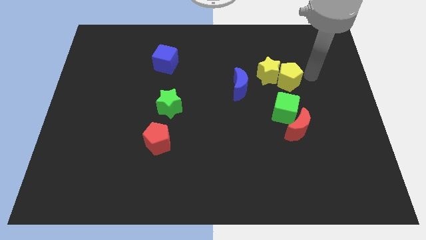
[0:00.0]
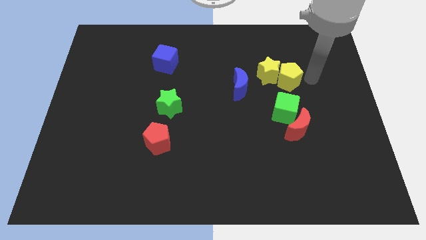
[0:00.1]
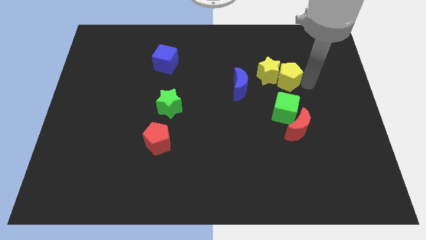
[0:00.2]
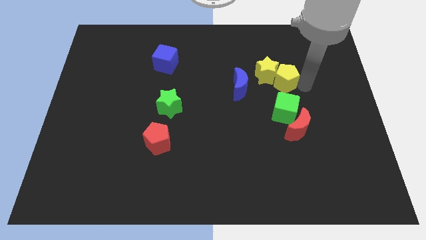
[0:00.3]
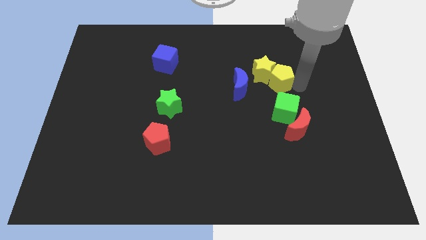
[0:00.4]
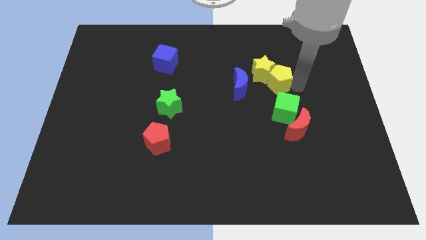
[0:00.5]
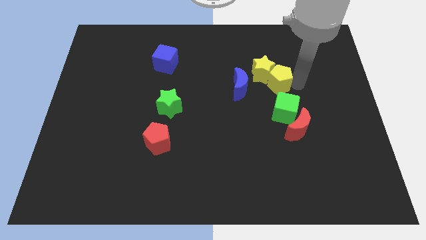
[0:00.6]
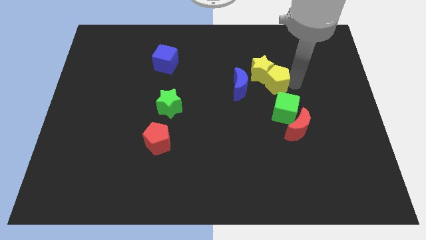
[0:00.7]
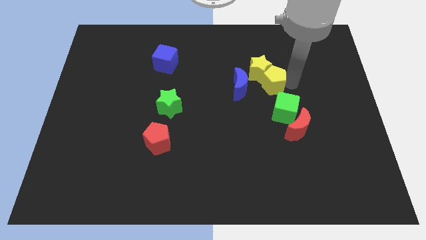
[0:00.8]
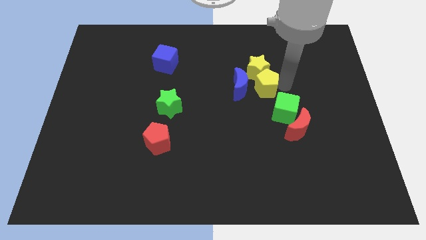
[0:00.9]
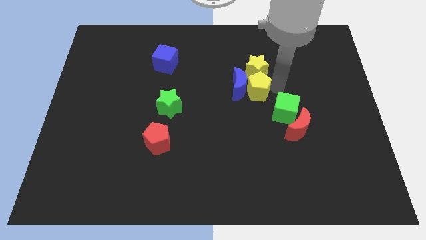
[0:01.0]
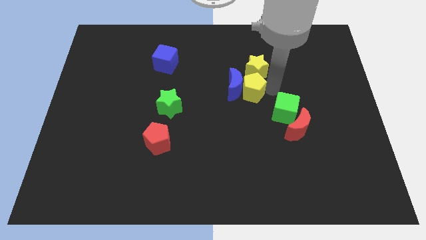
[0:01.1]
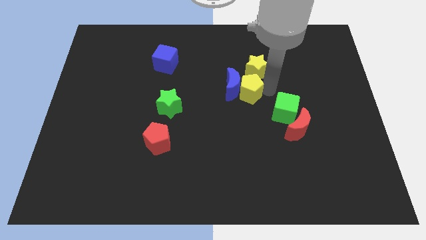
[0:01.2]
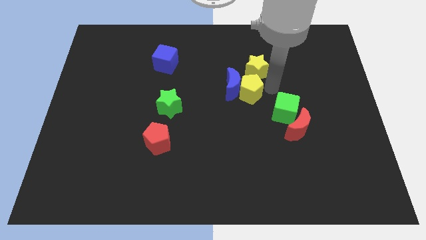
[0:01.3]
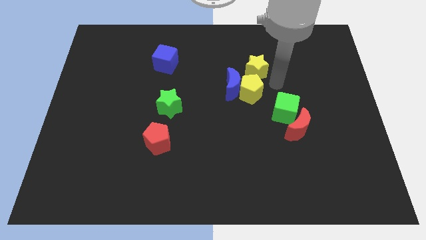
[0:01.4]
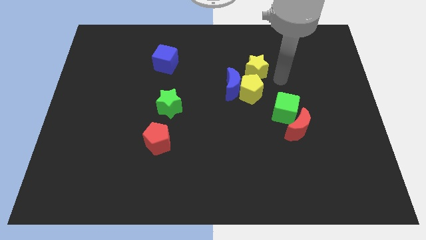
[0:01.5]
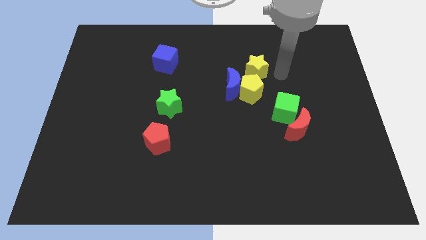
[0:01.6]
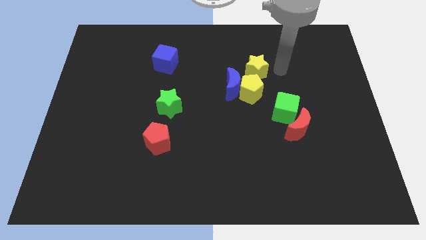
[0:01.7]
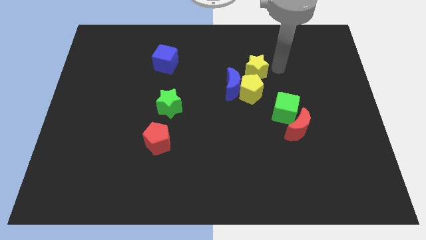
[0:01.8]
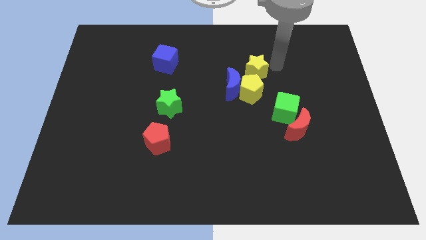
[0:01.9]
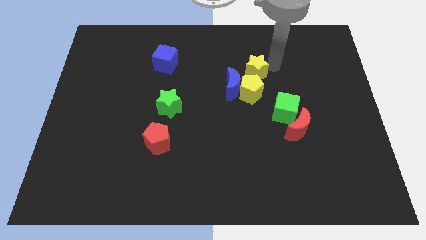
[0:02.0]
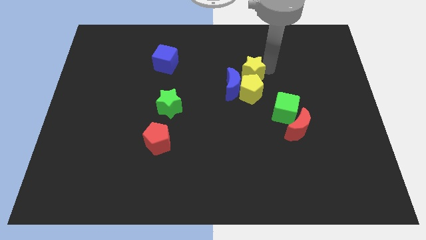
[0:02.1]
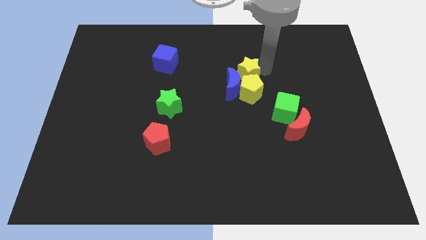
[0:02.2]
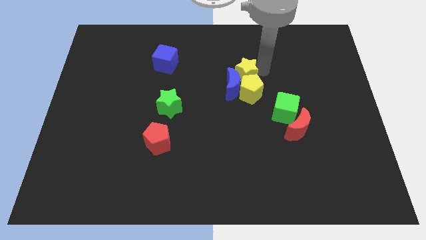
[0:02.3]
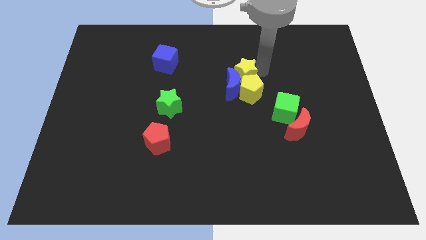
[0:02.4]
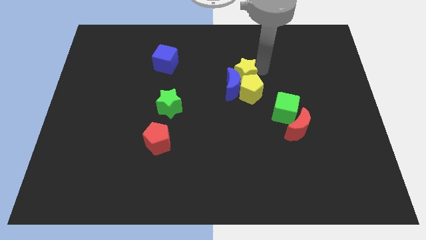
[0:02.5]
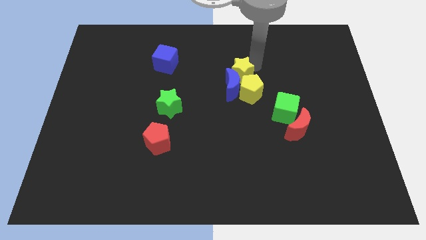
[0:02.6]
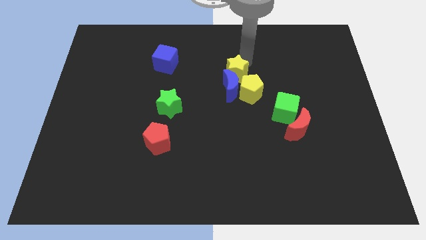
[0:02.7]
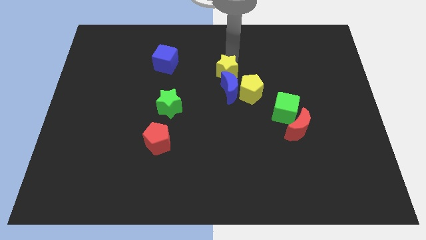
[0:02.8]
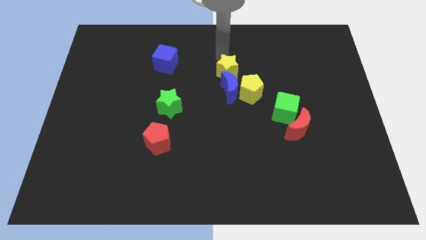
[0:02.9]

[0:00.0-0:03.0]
place the yellow star above the blue moon

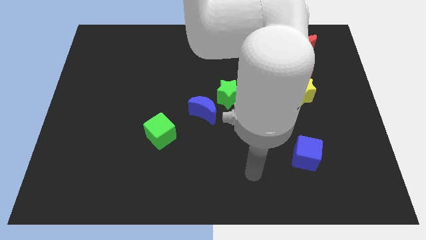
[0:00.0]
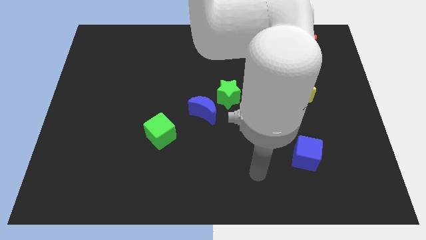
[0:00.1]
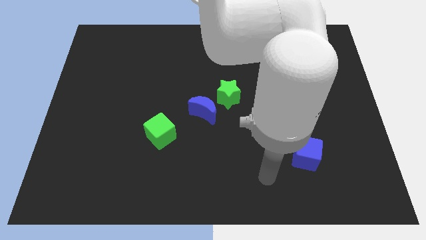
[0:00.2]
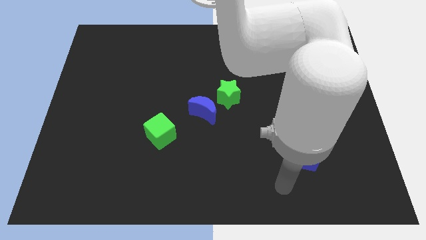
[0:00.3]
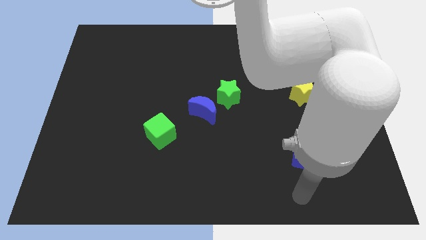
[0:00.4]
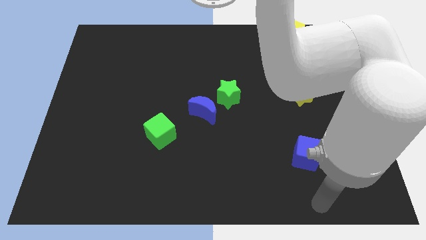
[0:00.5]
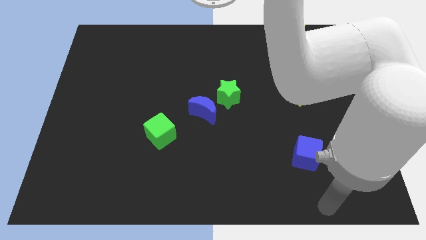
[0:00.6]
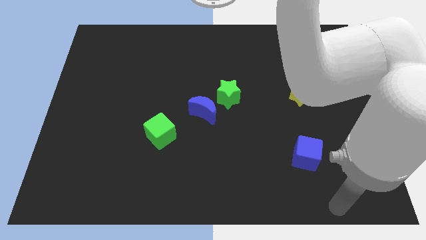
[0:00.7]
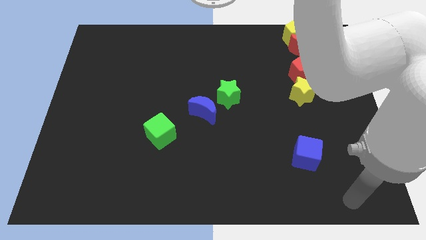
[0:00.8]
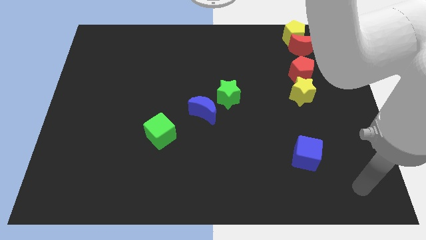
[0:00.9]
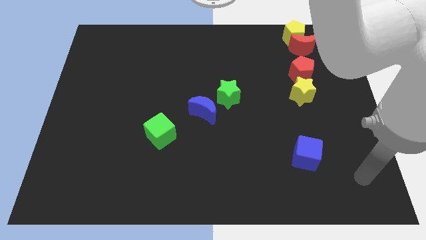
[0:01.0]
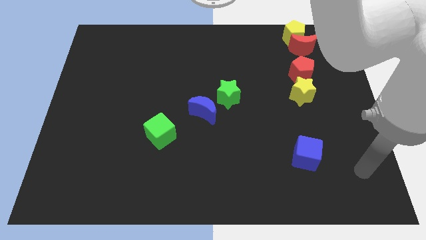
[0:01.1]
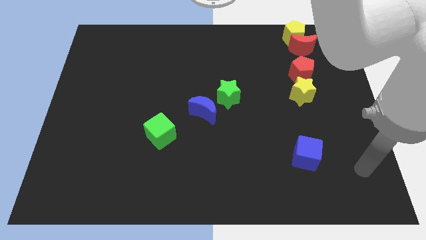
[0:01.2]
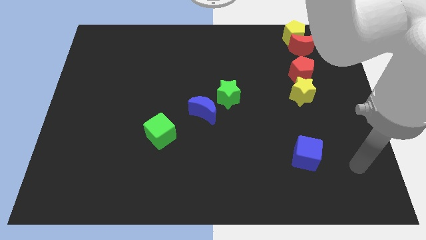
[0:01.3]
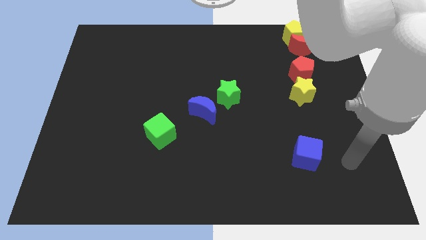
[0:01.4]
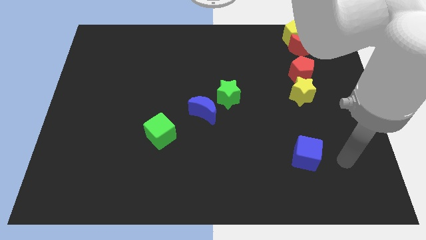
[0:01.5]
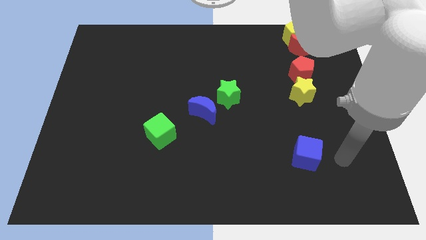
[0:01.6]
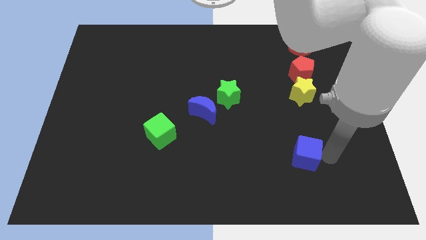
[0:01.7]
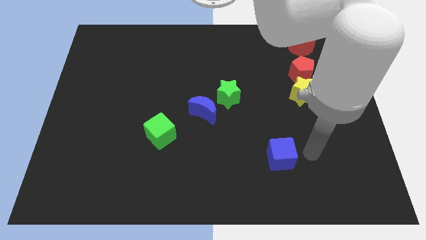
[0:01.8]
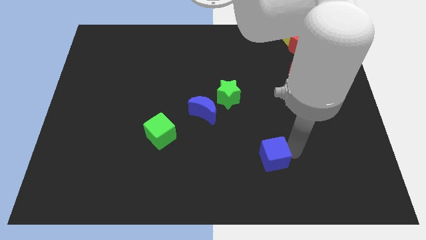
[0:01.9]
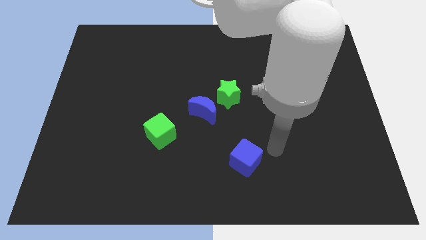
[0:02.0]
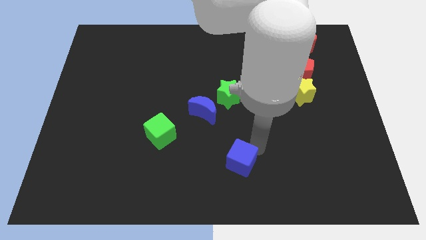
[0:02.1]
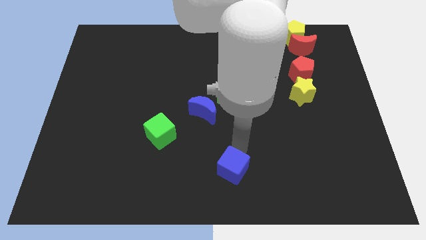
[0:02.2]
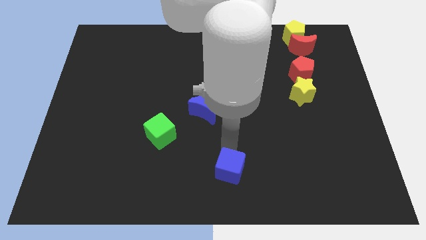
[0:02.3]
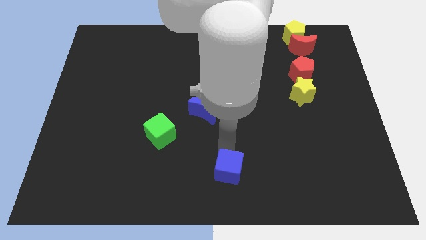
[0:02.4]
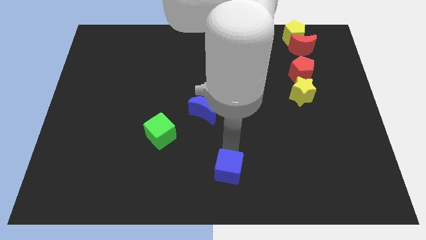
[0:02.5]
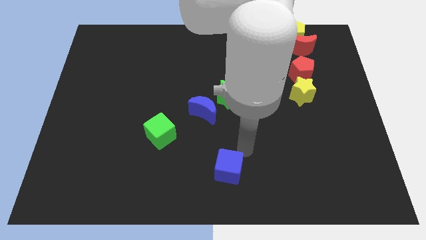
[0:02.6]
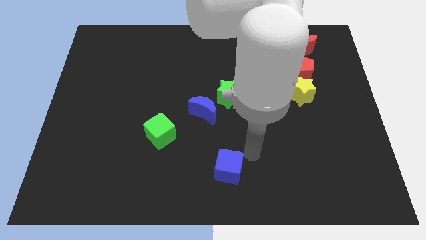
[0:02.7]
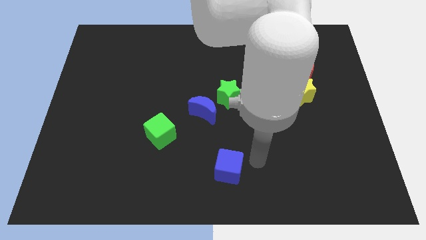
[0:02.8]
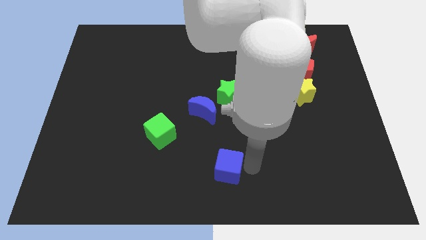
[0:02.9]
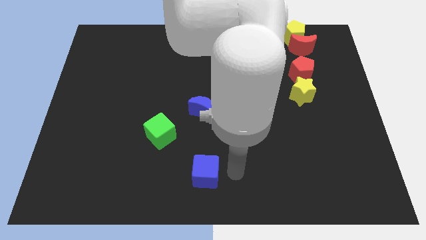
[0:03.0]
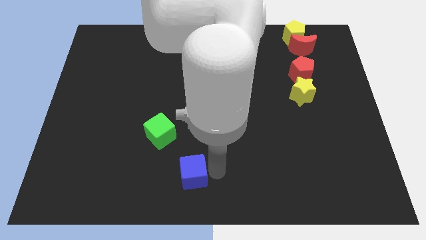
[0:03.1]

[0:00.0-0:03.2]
slide the blue cube diagonally to the yellow star

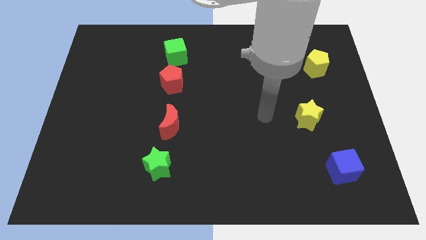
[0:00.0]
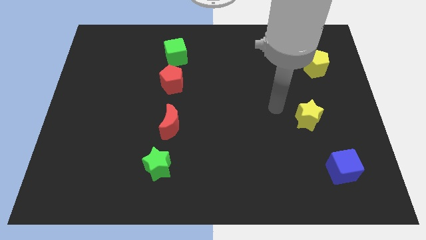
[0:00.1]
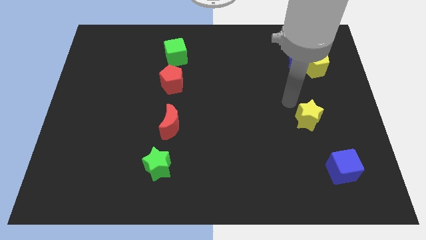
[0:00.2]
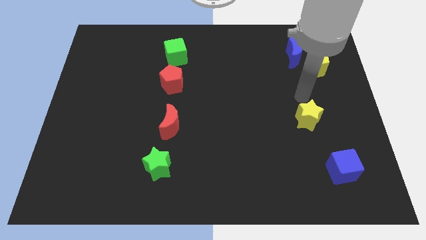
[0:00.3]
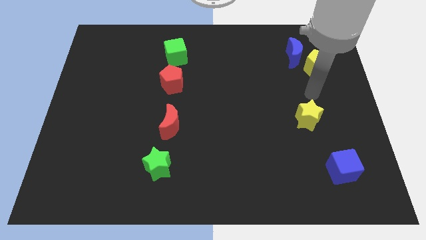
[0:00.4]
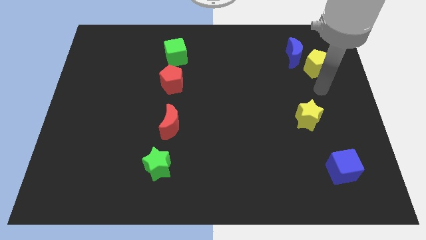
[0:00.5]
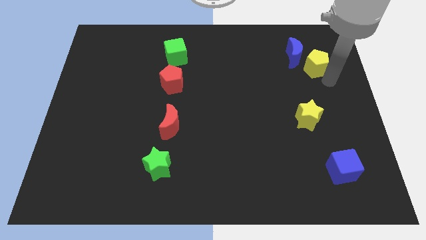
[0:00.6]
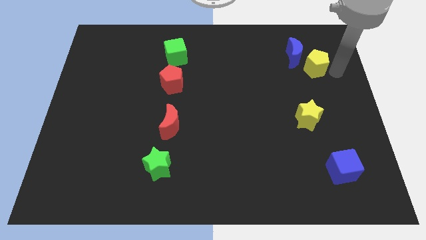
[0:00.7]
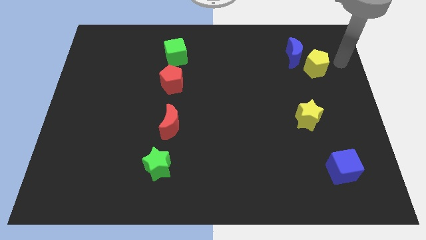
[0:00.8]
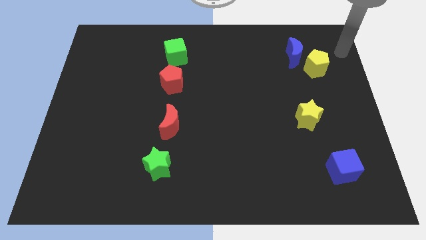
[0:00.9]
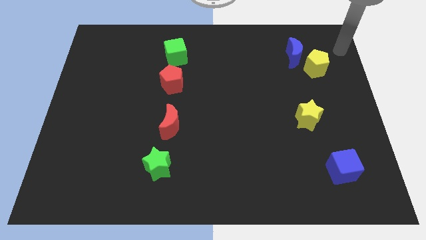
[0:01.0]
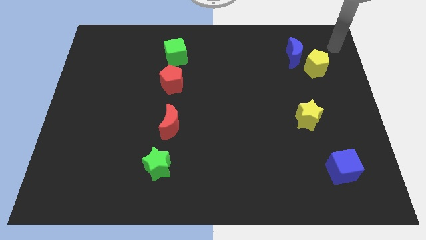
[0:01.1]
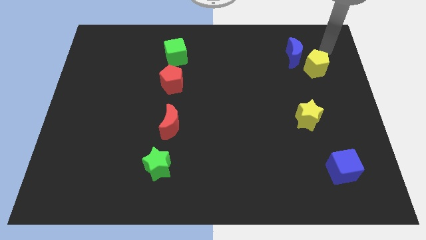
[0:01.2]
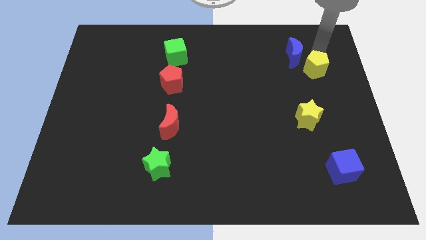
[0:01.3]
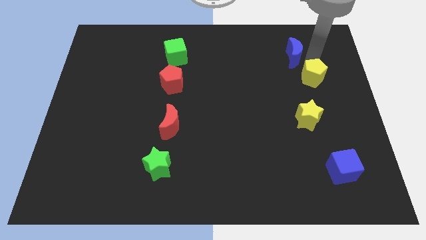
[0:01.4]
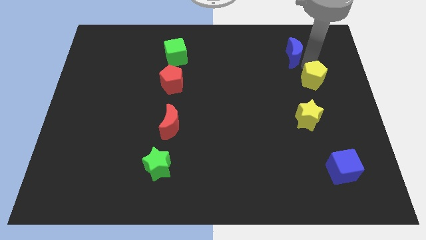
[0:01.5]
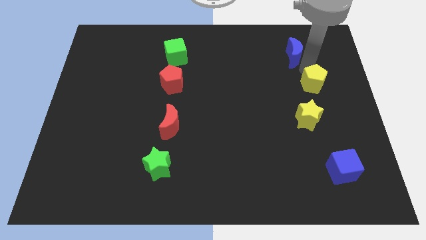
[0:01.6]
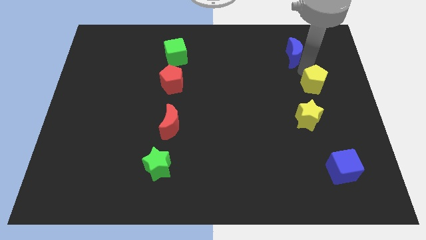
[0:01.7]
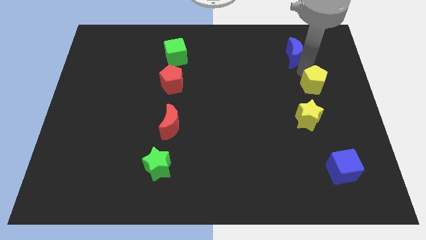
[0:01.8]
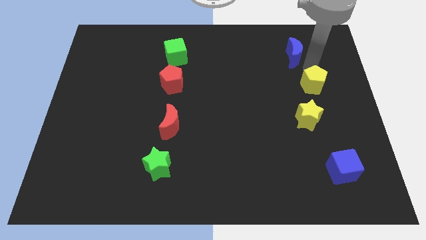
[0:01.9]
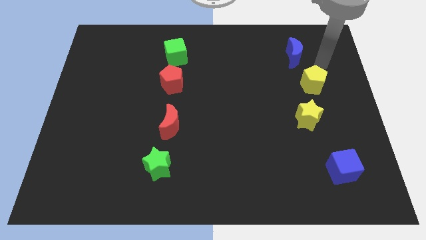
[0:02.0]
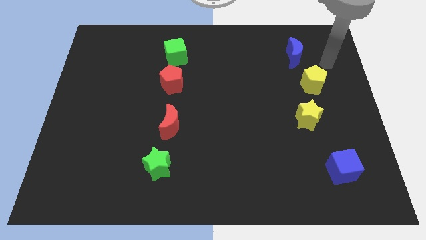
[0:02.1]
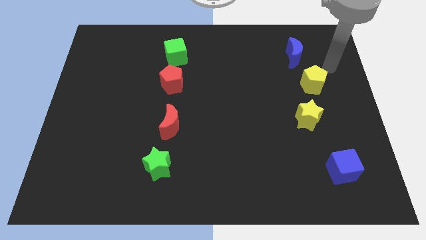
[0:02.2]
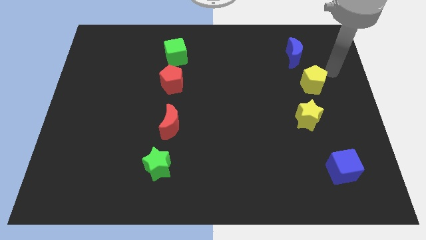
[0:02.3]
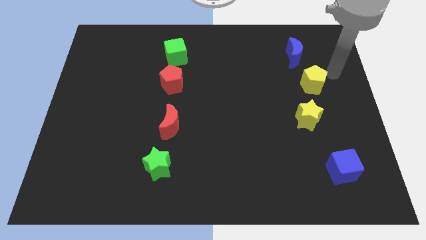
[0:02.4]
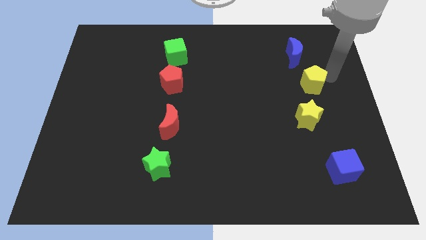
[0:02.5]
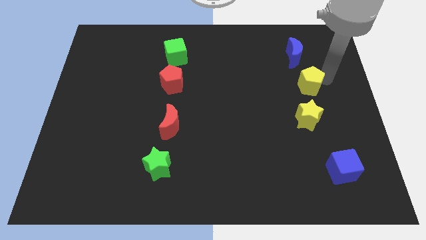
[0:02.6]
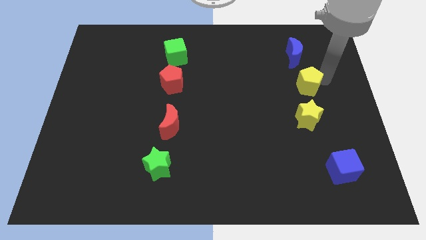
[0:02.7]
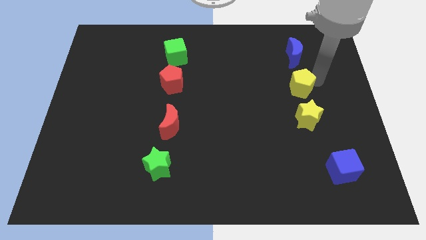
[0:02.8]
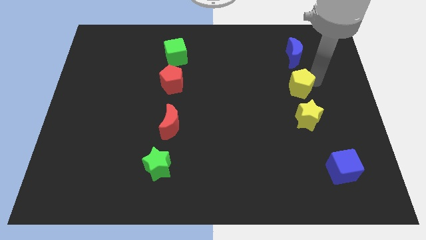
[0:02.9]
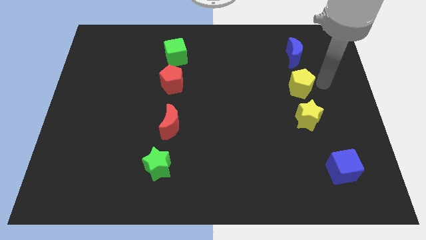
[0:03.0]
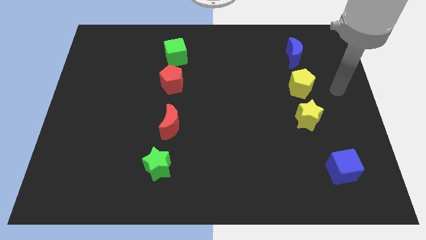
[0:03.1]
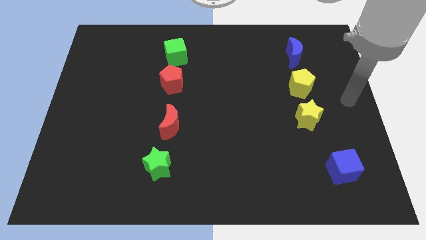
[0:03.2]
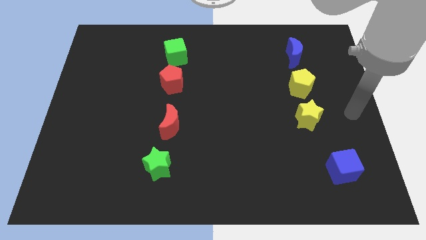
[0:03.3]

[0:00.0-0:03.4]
put the yellow pentagon and the yellow star in a line vertically
